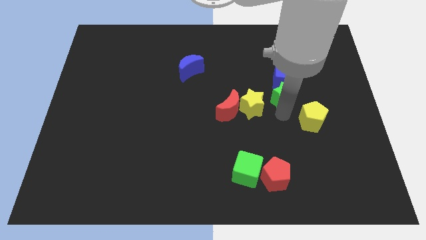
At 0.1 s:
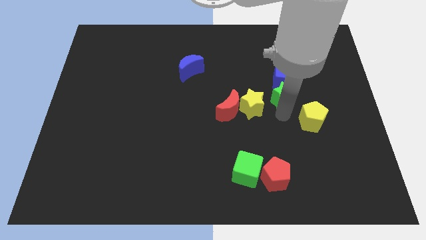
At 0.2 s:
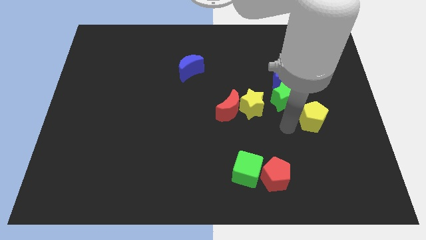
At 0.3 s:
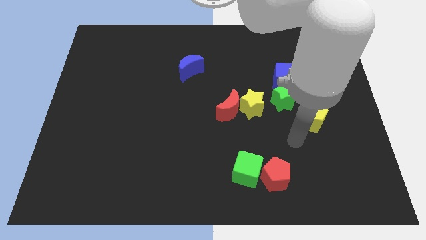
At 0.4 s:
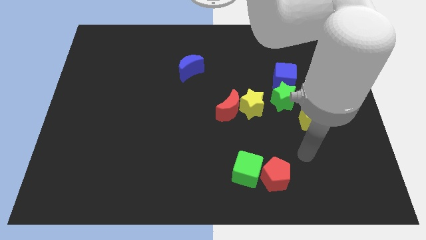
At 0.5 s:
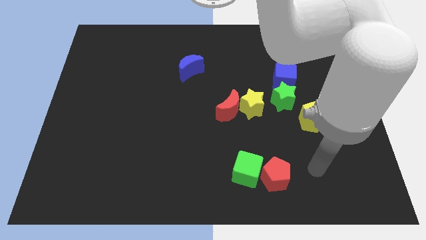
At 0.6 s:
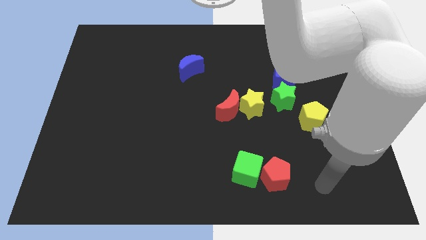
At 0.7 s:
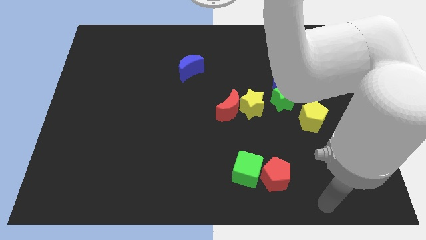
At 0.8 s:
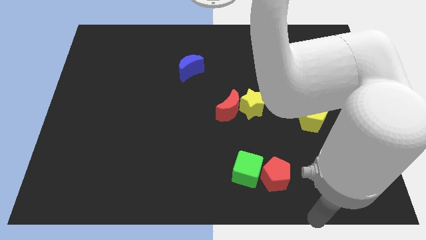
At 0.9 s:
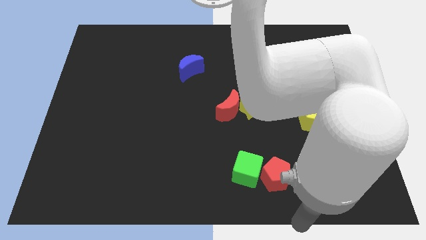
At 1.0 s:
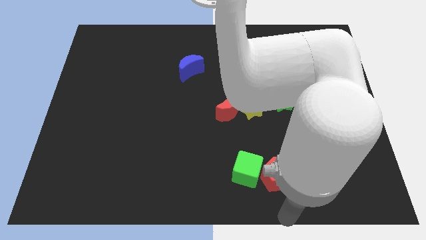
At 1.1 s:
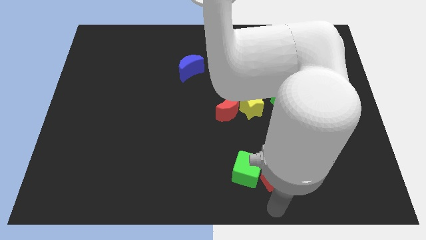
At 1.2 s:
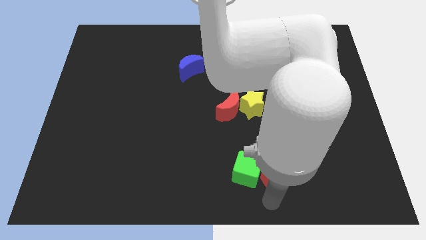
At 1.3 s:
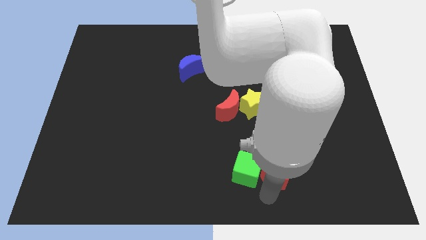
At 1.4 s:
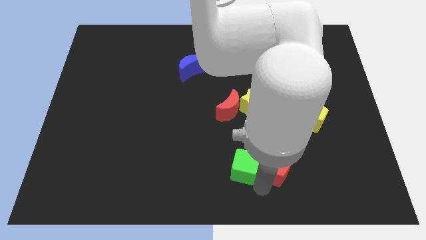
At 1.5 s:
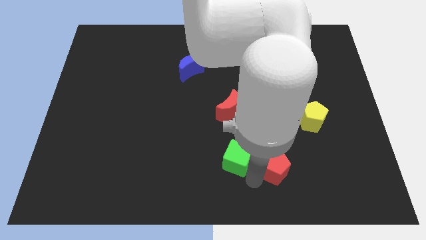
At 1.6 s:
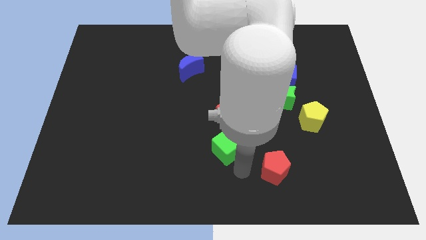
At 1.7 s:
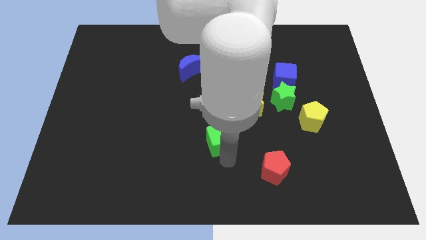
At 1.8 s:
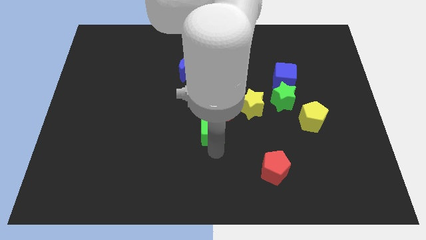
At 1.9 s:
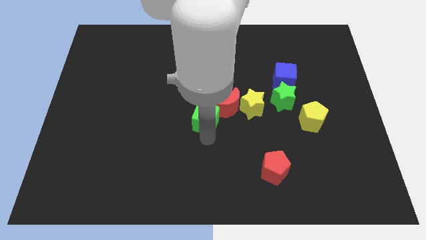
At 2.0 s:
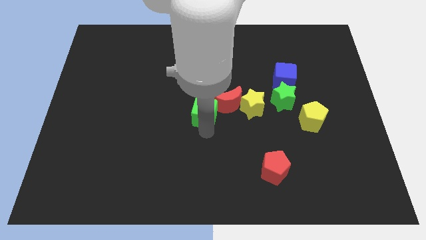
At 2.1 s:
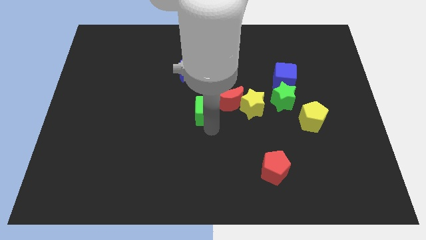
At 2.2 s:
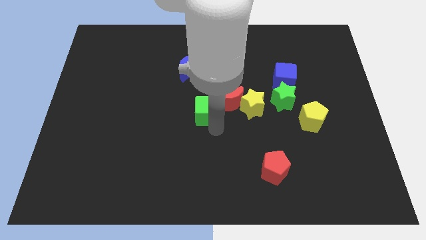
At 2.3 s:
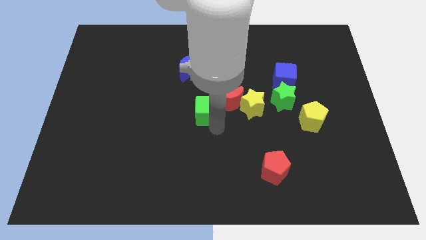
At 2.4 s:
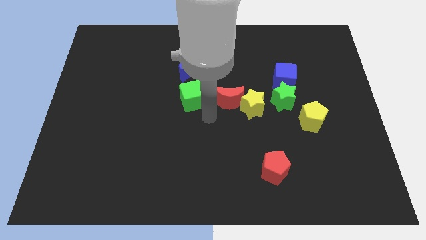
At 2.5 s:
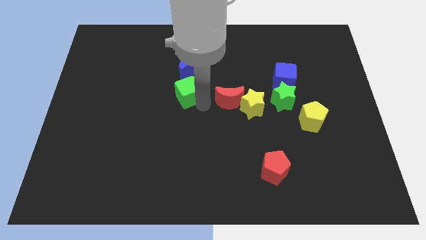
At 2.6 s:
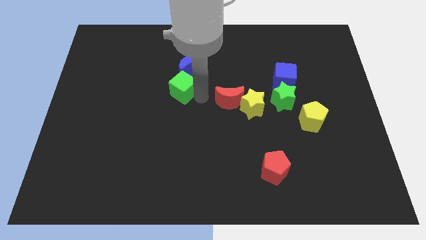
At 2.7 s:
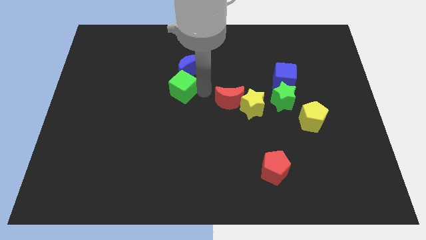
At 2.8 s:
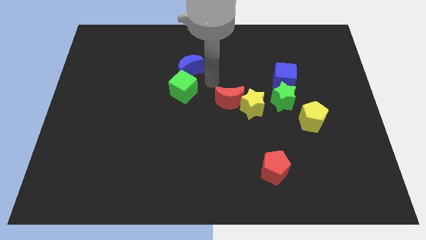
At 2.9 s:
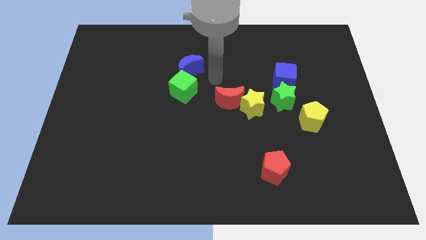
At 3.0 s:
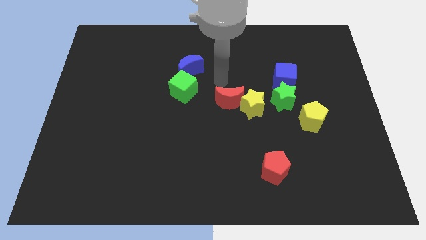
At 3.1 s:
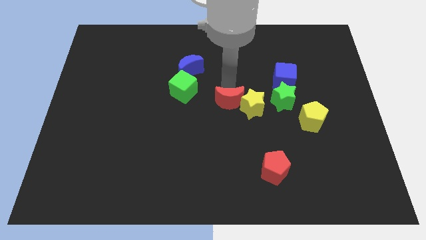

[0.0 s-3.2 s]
push the green cube to the bottom side of the blue crescent

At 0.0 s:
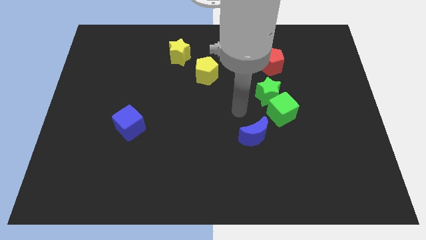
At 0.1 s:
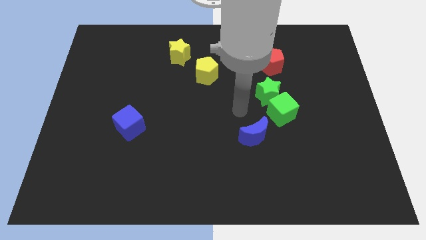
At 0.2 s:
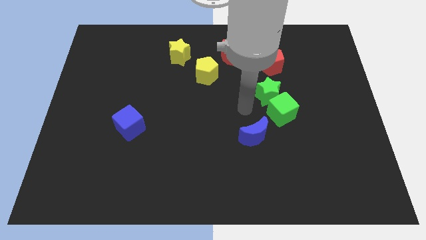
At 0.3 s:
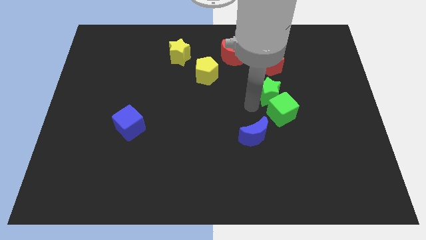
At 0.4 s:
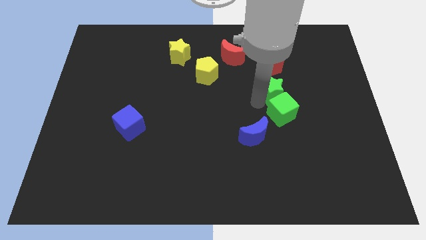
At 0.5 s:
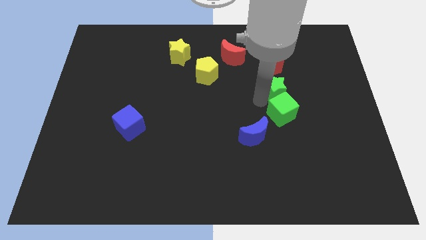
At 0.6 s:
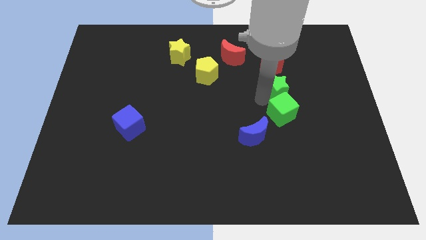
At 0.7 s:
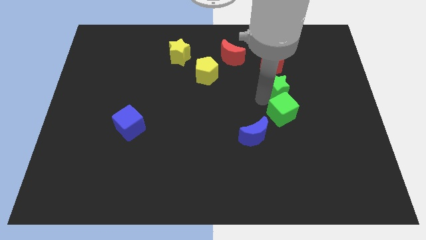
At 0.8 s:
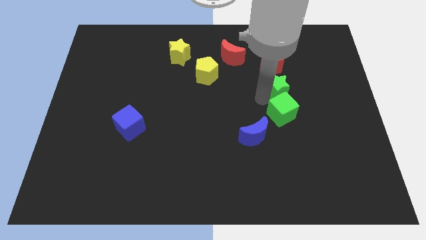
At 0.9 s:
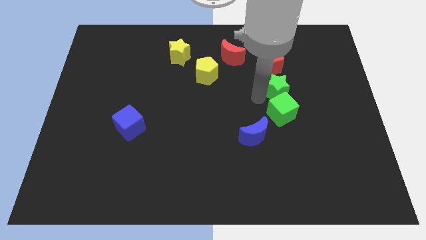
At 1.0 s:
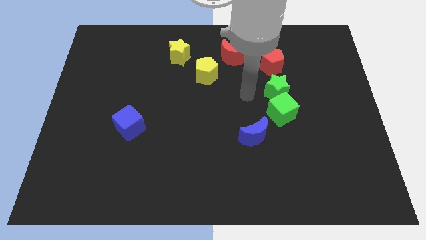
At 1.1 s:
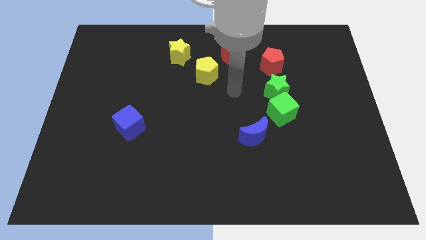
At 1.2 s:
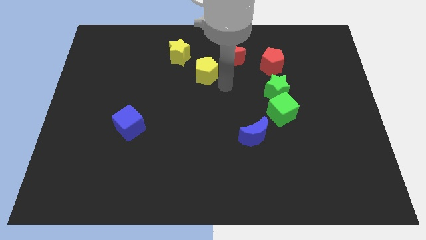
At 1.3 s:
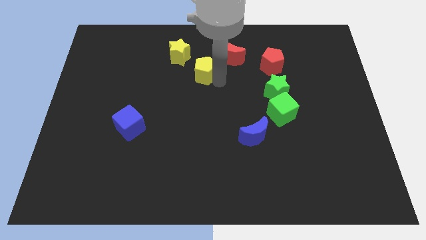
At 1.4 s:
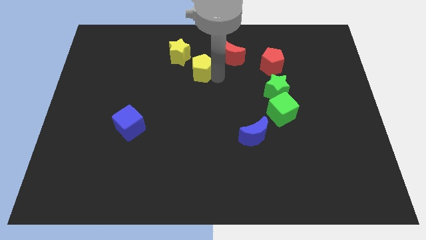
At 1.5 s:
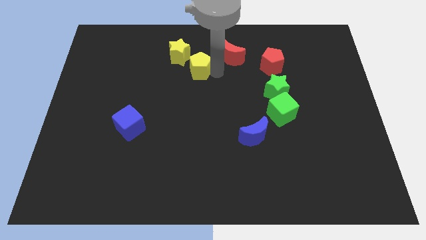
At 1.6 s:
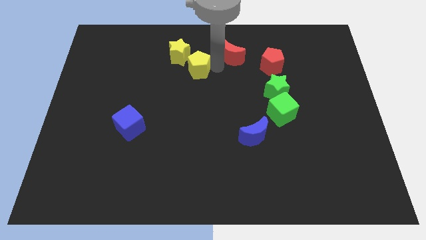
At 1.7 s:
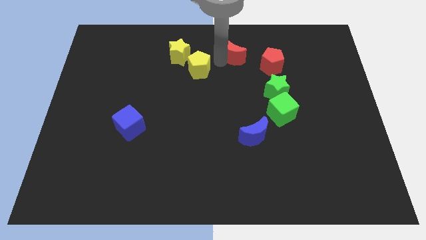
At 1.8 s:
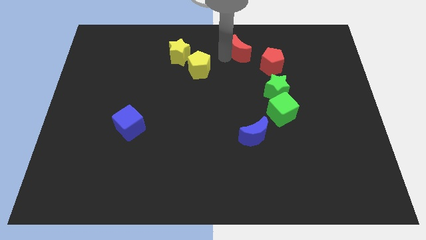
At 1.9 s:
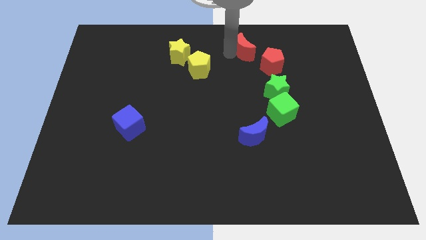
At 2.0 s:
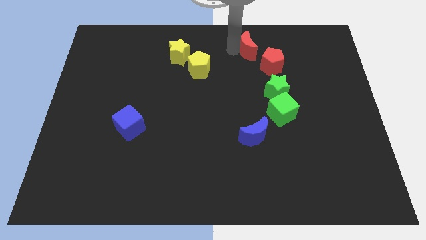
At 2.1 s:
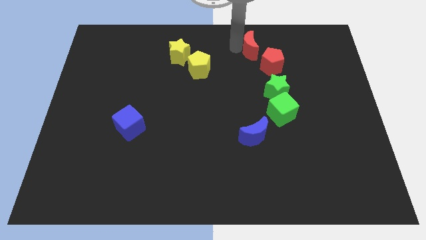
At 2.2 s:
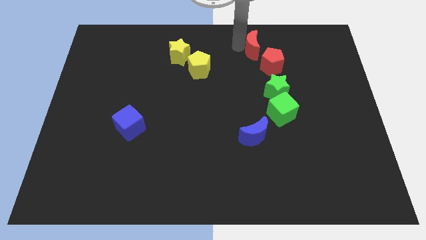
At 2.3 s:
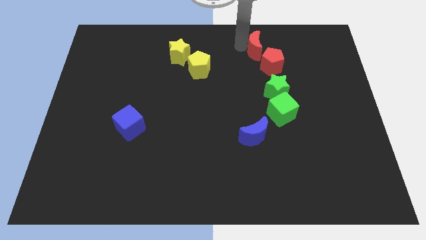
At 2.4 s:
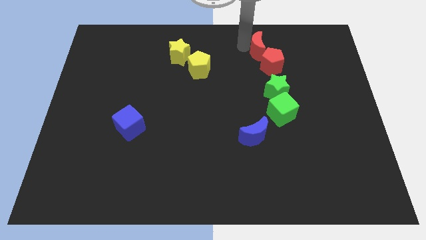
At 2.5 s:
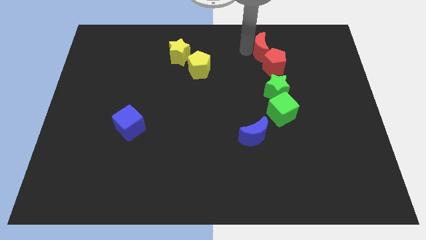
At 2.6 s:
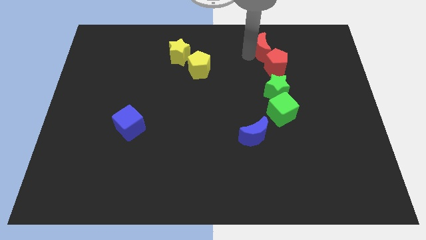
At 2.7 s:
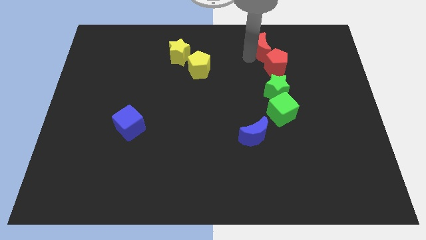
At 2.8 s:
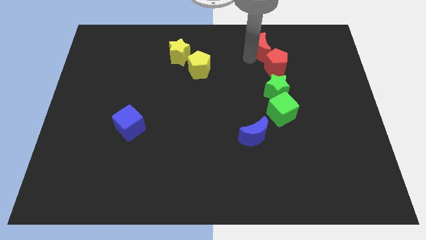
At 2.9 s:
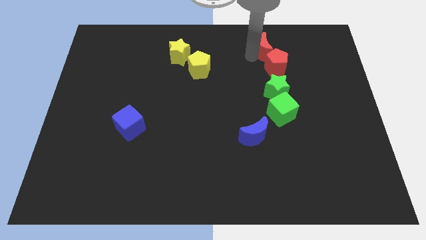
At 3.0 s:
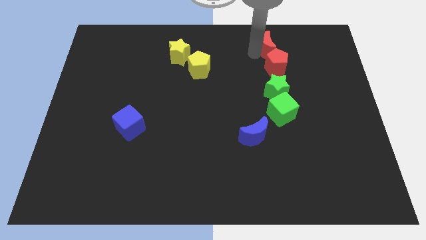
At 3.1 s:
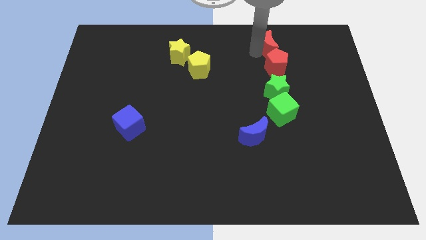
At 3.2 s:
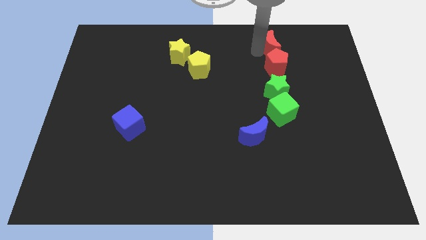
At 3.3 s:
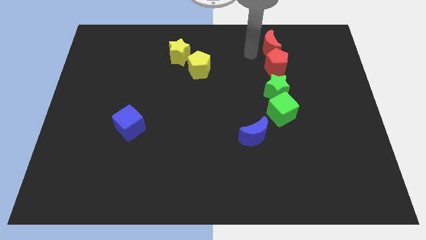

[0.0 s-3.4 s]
move the red blocks and the green blocks to form a vertical line

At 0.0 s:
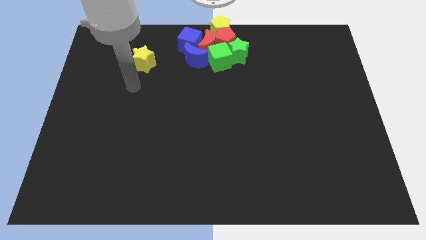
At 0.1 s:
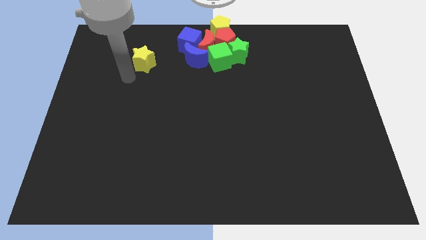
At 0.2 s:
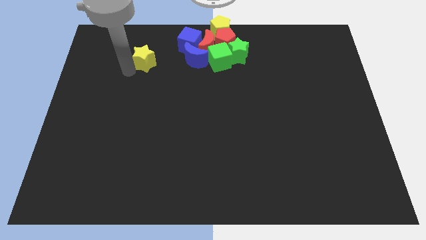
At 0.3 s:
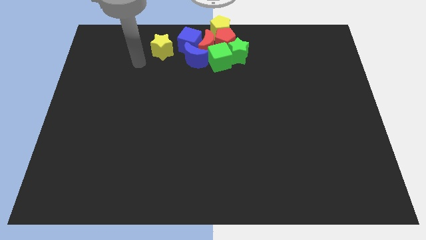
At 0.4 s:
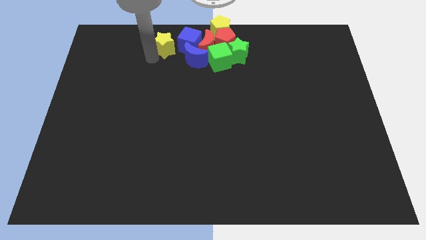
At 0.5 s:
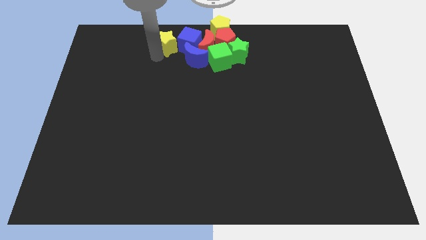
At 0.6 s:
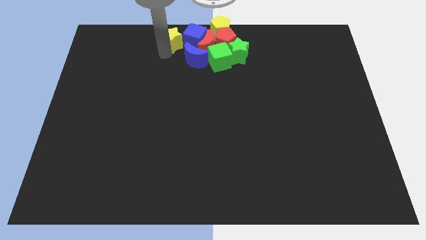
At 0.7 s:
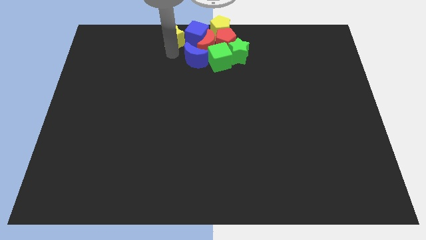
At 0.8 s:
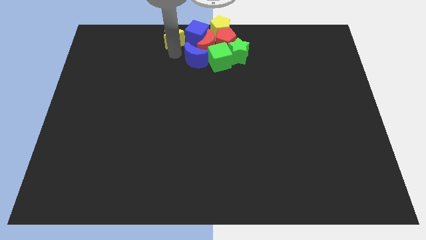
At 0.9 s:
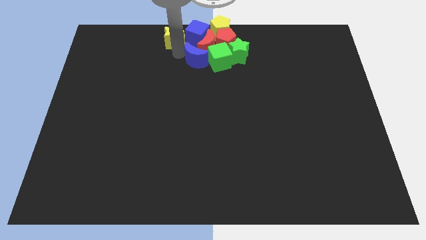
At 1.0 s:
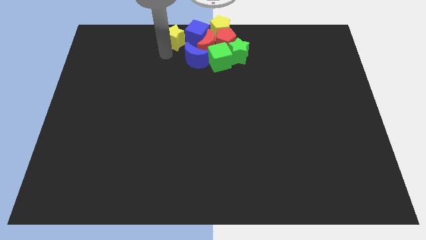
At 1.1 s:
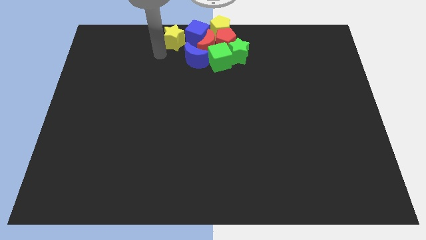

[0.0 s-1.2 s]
slide the yellow star into the blue cube

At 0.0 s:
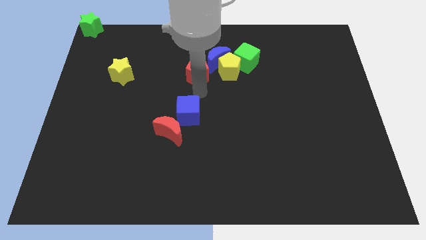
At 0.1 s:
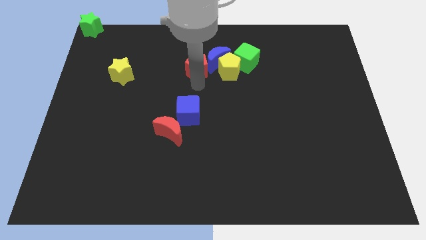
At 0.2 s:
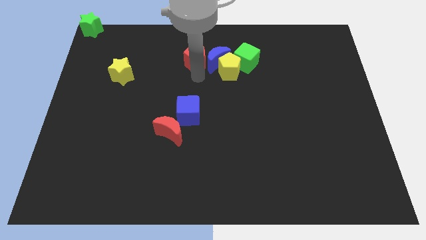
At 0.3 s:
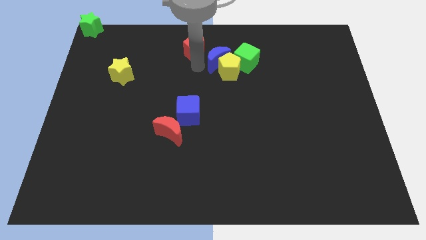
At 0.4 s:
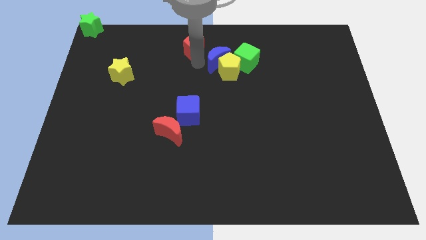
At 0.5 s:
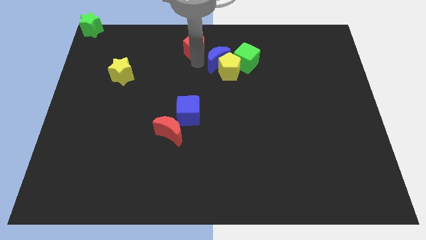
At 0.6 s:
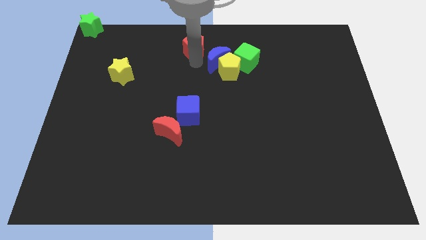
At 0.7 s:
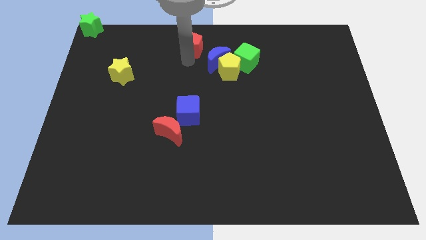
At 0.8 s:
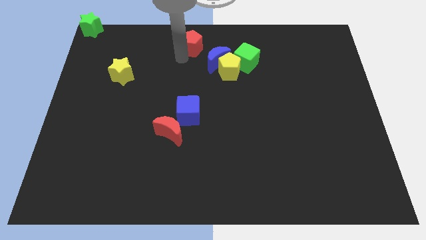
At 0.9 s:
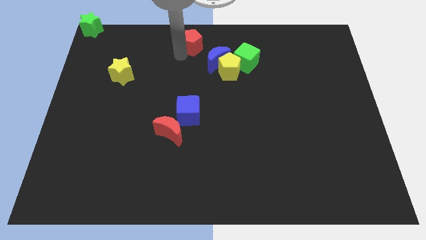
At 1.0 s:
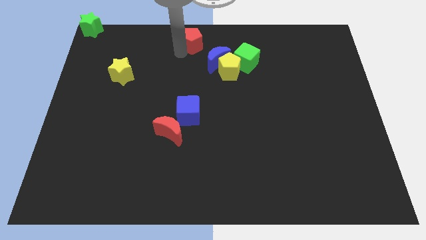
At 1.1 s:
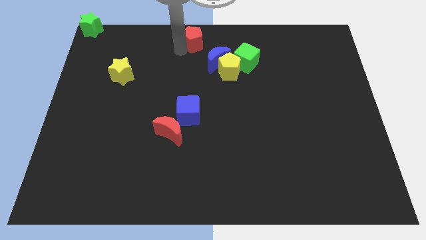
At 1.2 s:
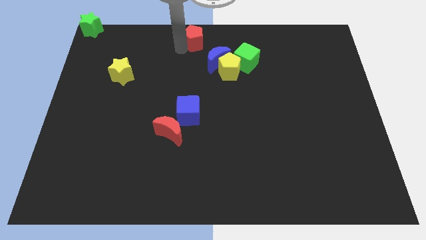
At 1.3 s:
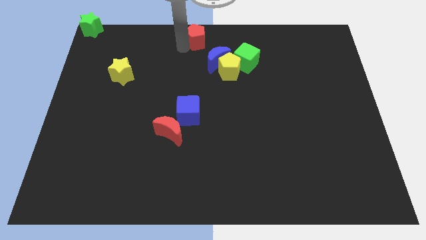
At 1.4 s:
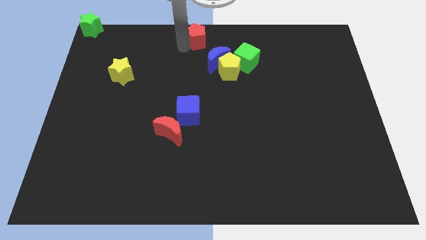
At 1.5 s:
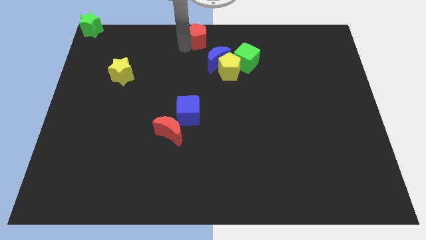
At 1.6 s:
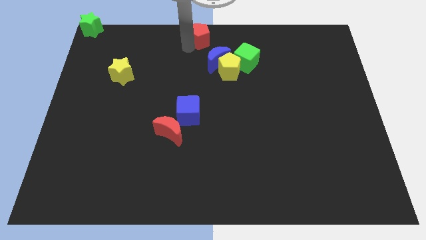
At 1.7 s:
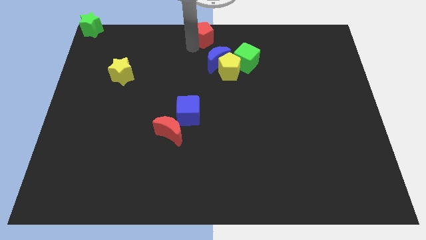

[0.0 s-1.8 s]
push the red pentagon to the top center of the board
